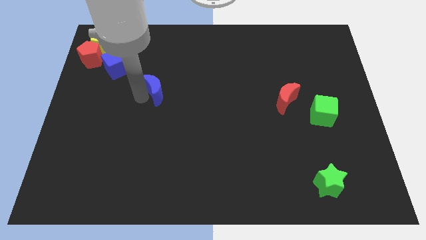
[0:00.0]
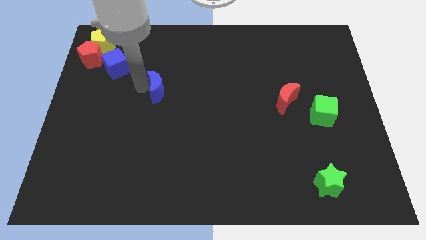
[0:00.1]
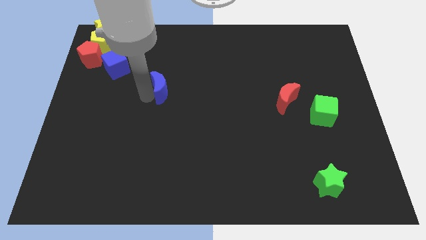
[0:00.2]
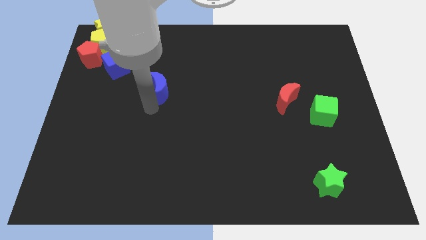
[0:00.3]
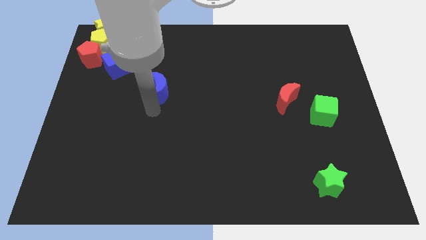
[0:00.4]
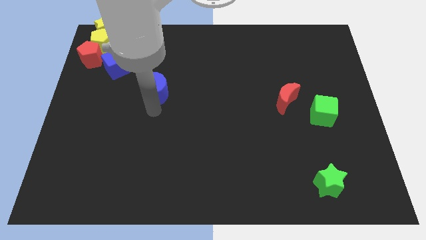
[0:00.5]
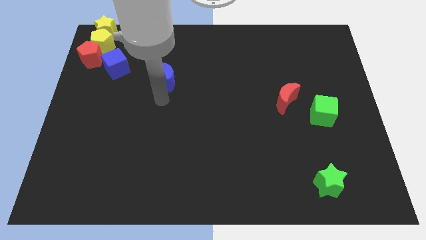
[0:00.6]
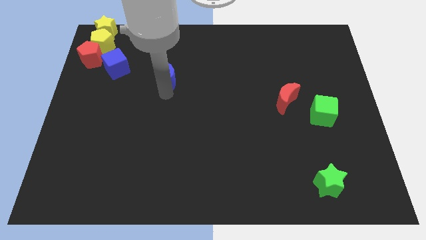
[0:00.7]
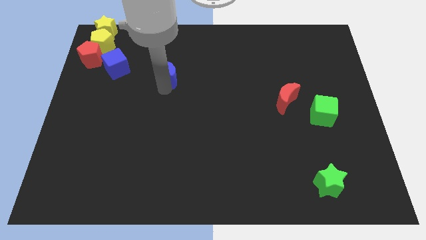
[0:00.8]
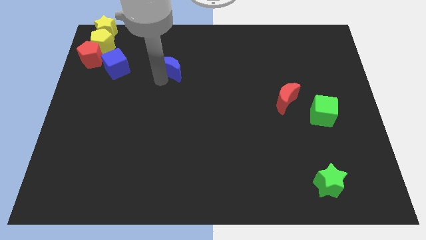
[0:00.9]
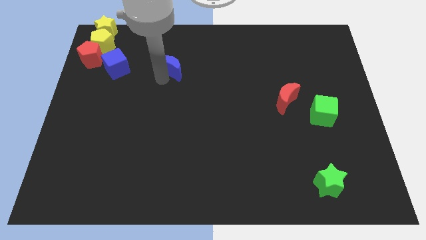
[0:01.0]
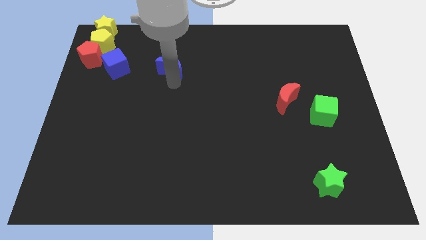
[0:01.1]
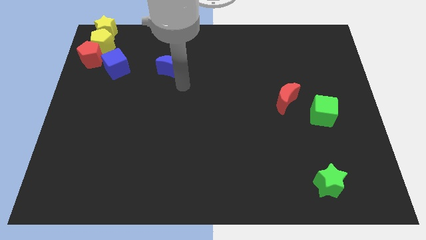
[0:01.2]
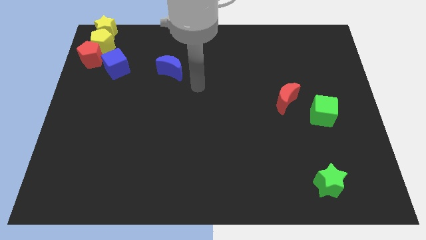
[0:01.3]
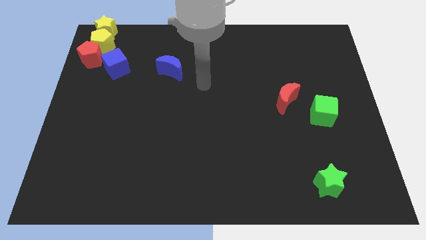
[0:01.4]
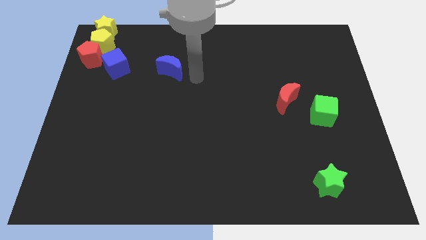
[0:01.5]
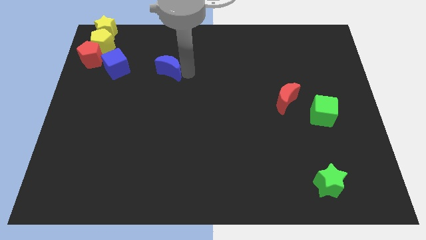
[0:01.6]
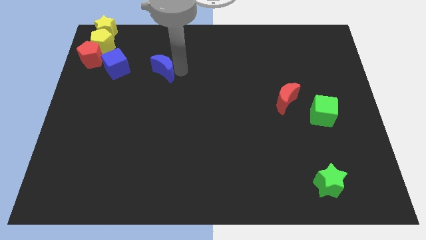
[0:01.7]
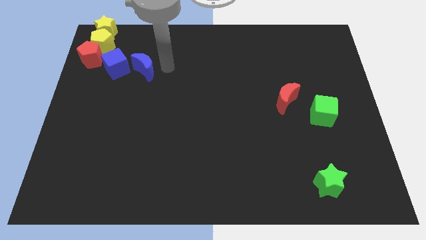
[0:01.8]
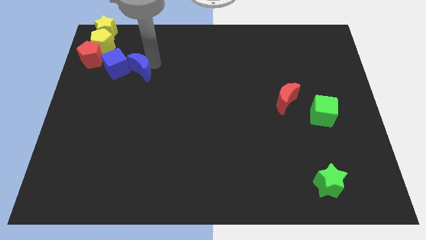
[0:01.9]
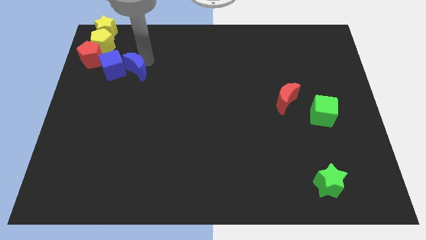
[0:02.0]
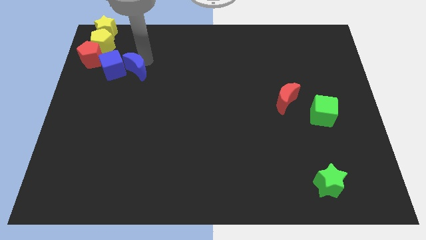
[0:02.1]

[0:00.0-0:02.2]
move blue moon into blue cube

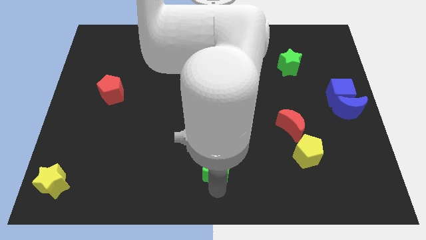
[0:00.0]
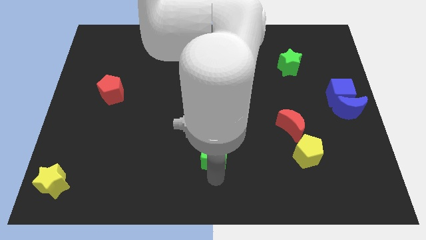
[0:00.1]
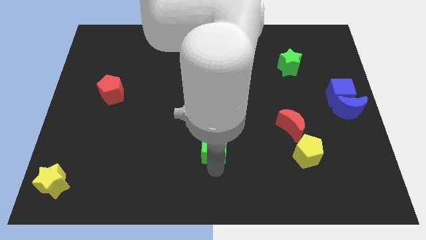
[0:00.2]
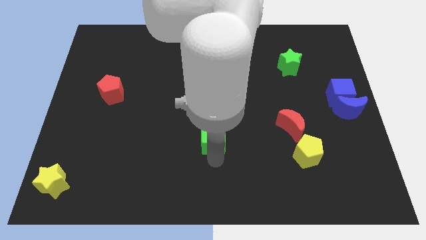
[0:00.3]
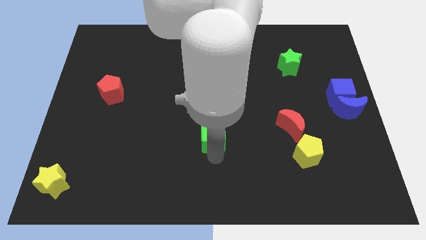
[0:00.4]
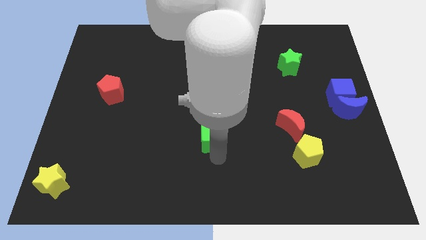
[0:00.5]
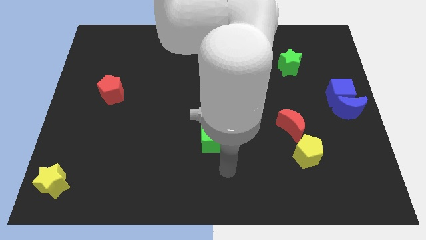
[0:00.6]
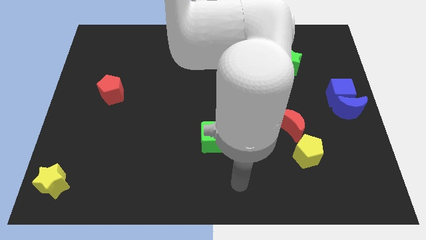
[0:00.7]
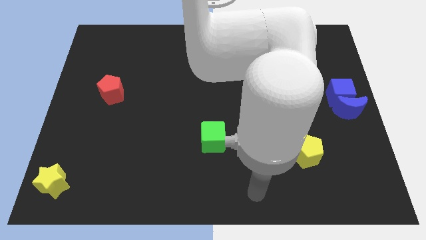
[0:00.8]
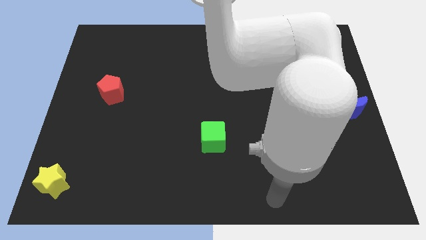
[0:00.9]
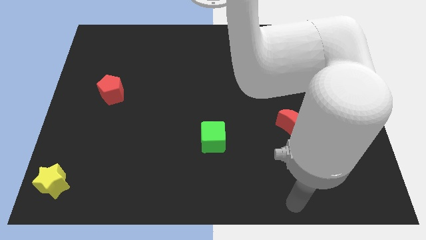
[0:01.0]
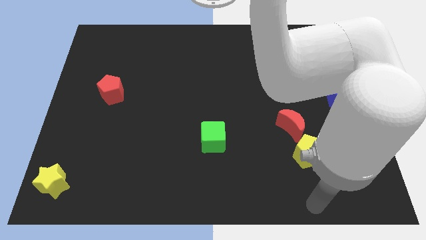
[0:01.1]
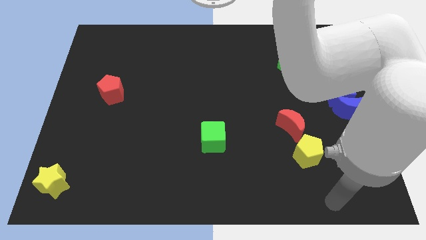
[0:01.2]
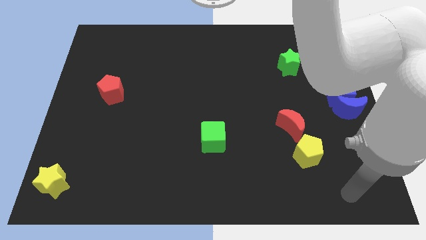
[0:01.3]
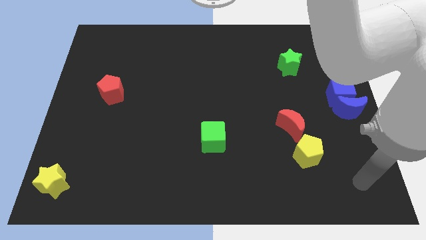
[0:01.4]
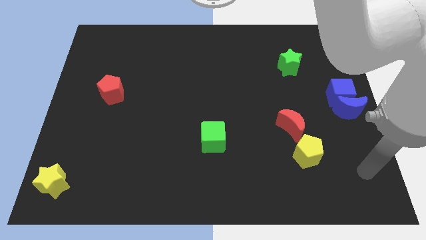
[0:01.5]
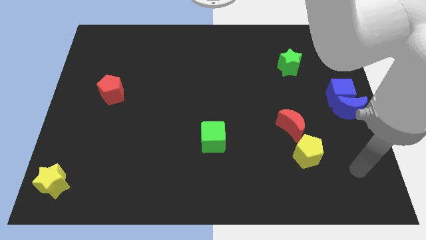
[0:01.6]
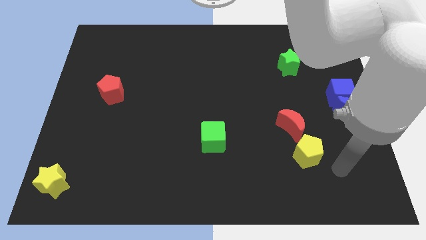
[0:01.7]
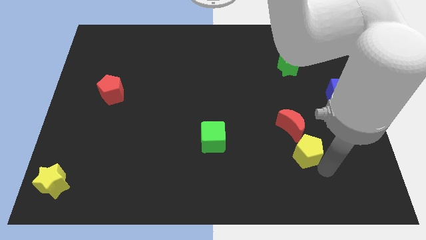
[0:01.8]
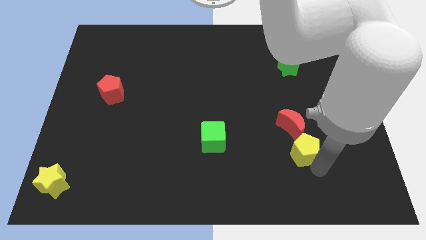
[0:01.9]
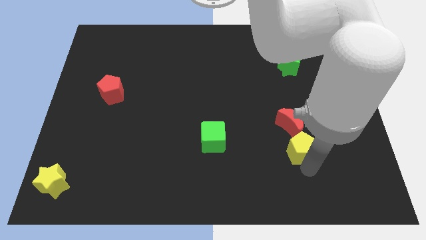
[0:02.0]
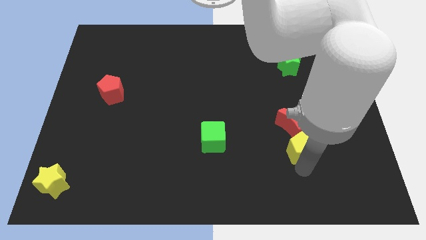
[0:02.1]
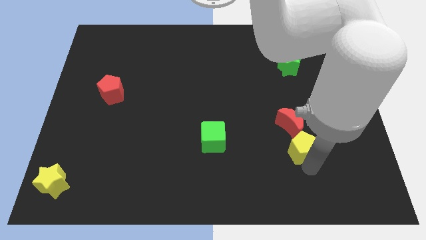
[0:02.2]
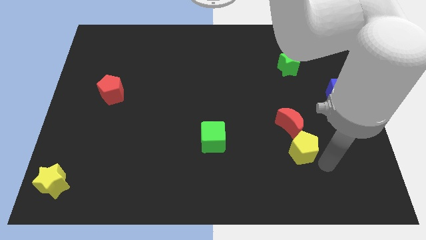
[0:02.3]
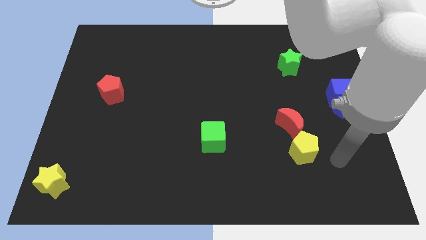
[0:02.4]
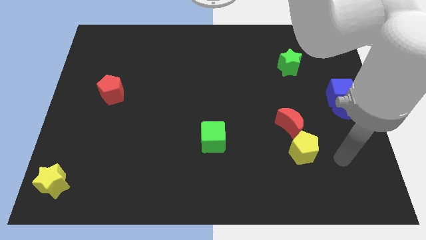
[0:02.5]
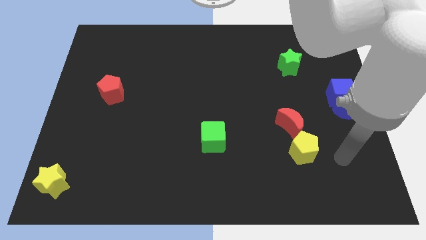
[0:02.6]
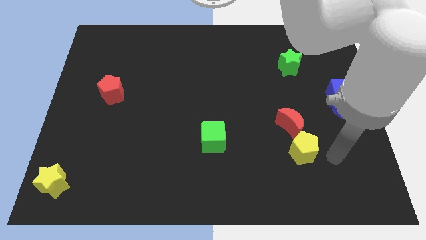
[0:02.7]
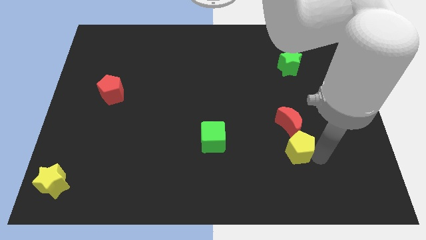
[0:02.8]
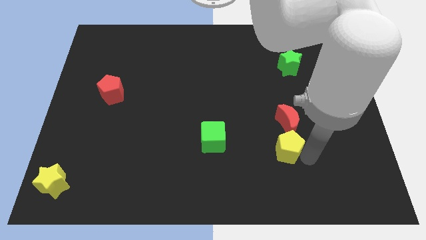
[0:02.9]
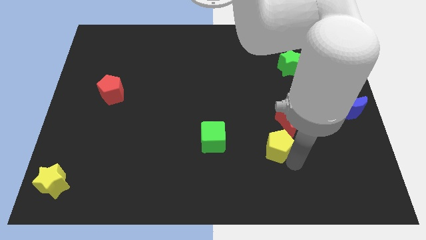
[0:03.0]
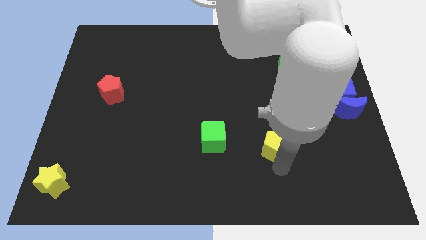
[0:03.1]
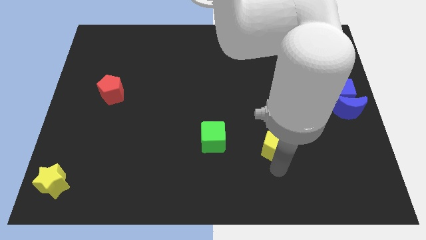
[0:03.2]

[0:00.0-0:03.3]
push yellow pentagon slightly towards left

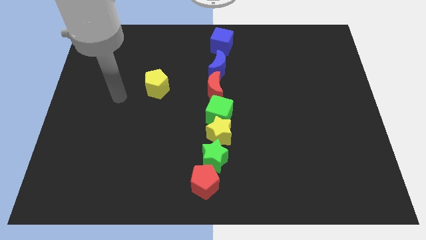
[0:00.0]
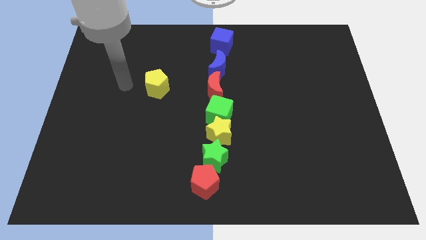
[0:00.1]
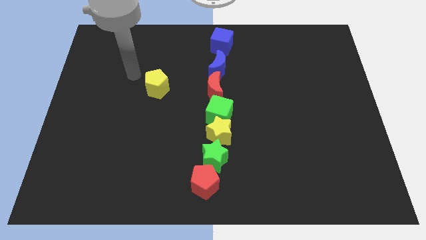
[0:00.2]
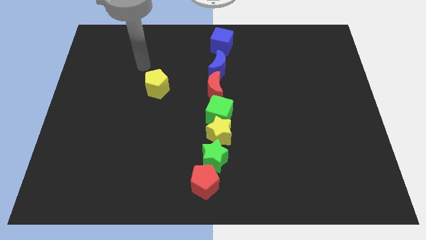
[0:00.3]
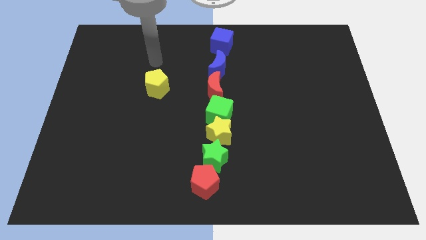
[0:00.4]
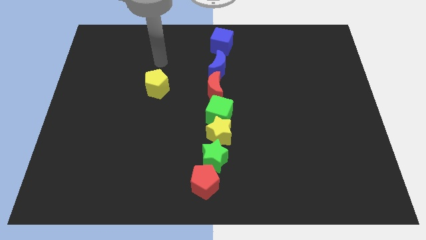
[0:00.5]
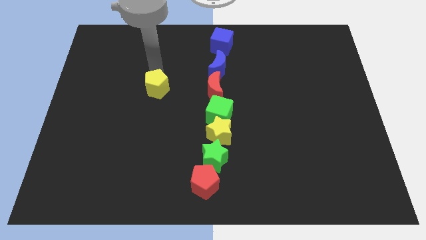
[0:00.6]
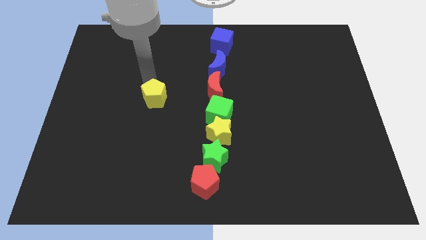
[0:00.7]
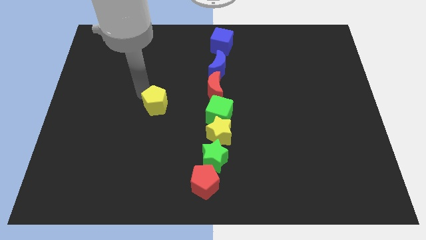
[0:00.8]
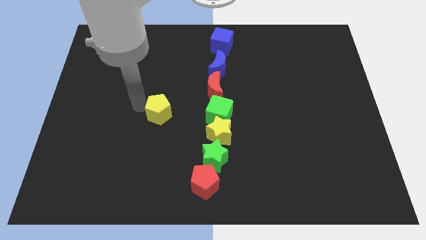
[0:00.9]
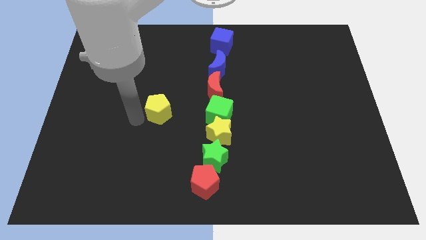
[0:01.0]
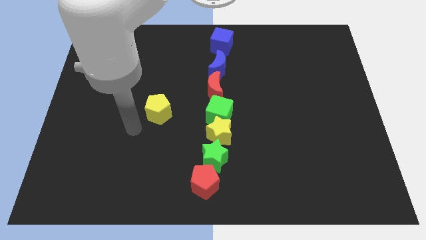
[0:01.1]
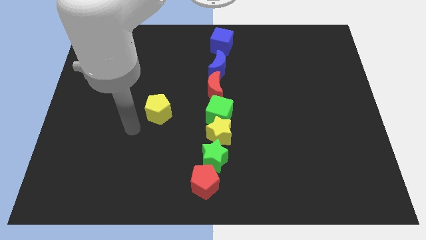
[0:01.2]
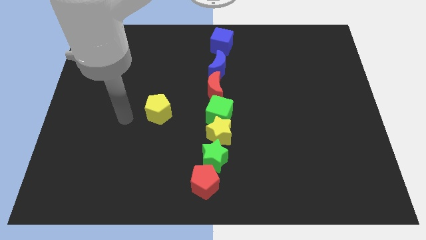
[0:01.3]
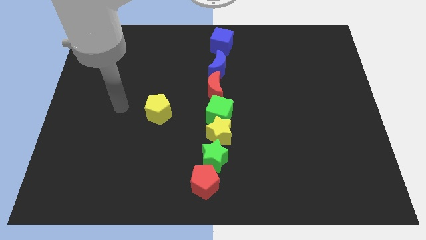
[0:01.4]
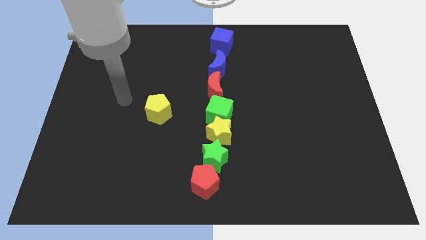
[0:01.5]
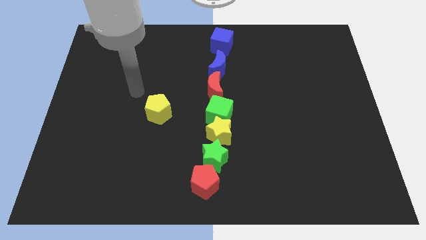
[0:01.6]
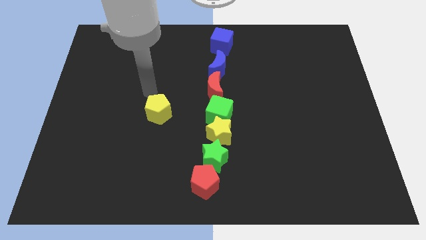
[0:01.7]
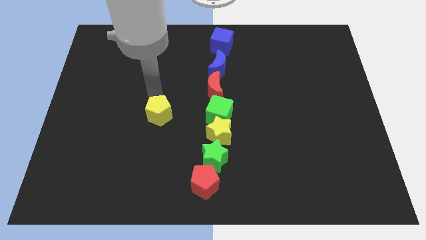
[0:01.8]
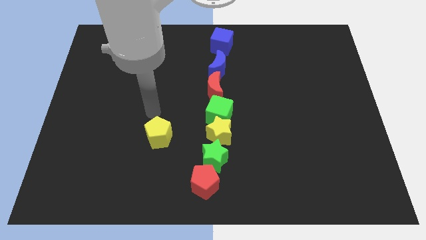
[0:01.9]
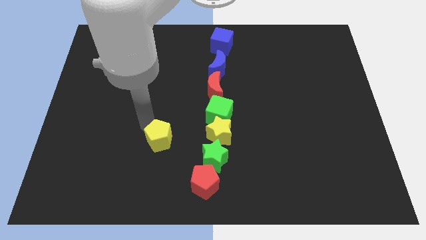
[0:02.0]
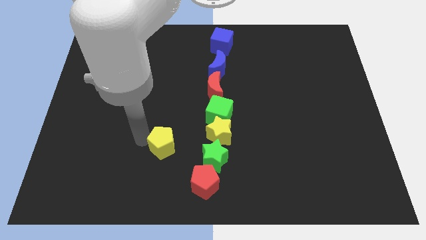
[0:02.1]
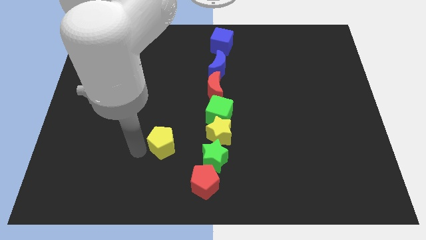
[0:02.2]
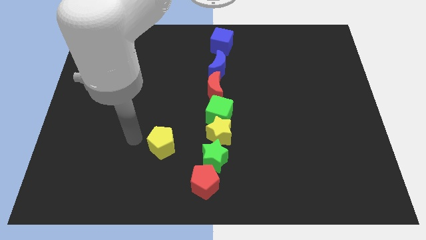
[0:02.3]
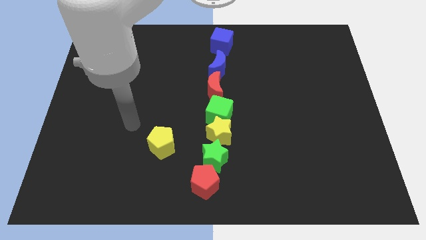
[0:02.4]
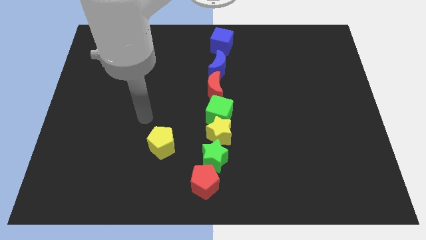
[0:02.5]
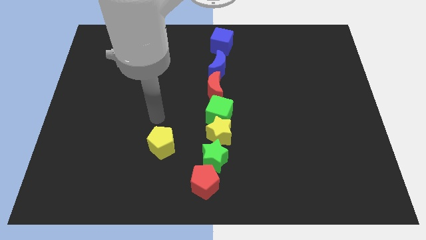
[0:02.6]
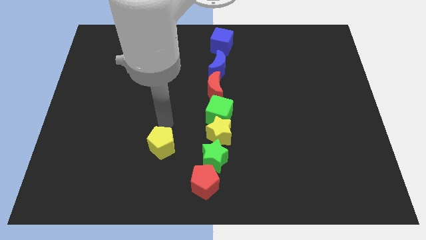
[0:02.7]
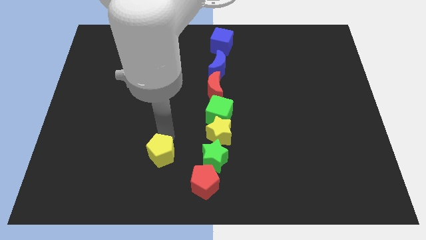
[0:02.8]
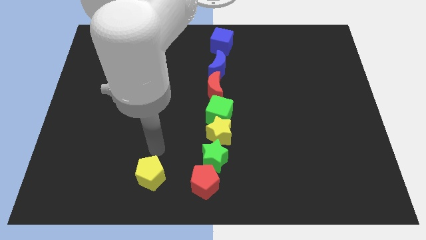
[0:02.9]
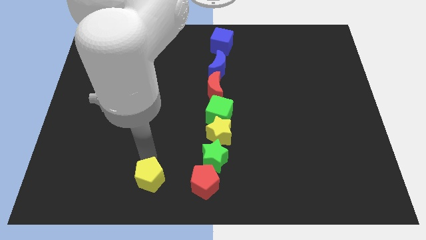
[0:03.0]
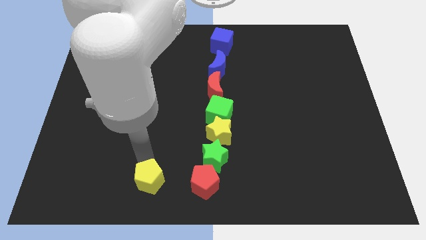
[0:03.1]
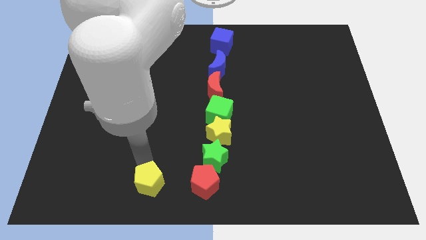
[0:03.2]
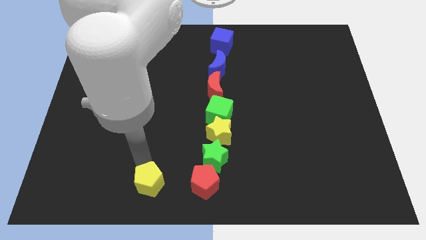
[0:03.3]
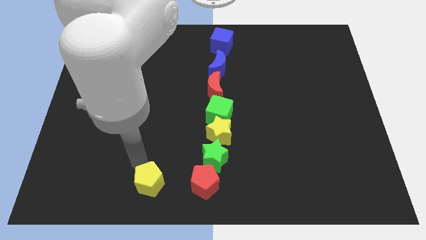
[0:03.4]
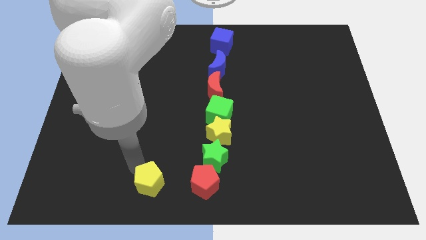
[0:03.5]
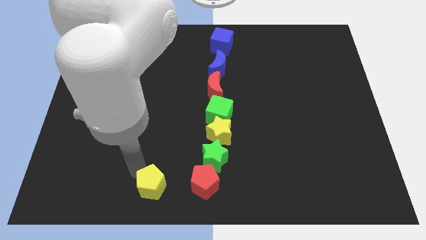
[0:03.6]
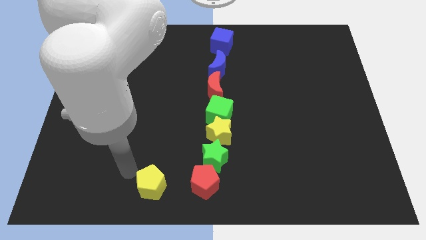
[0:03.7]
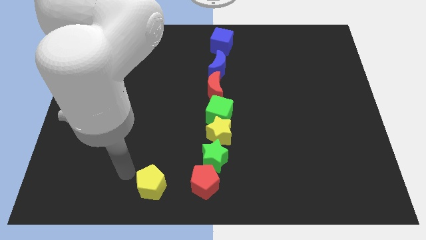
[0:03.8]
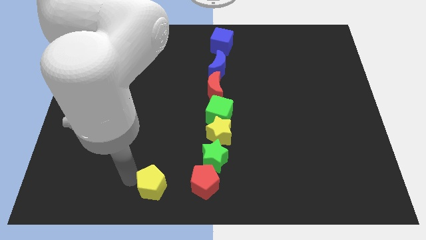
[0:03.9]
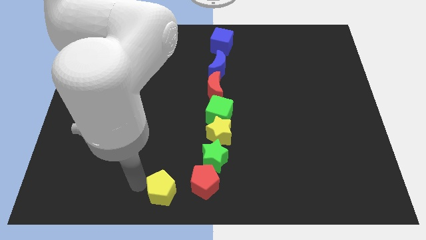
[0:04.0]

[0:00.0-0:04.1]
place the yellow pentagon to the left of the red pentagon
